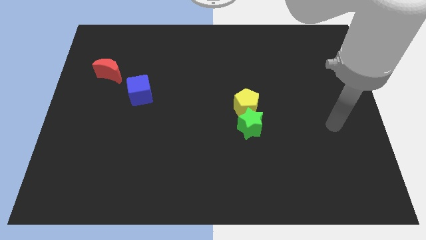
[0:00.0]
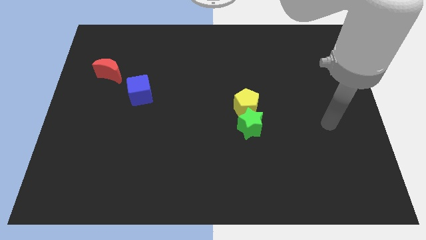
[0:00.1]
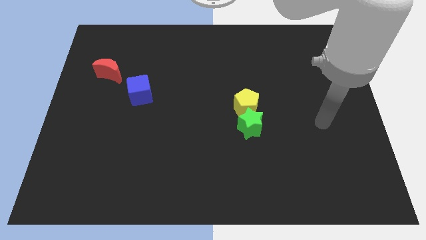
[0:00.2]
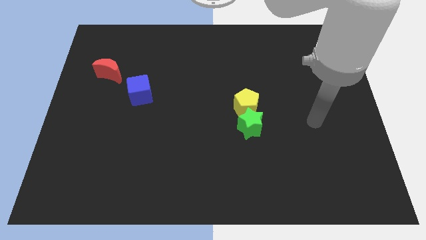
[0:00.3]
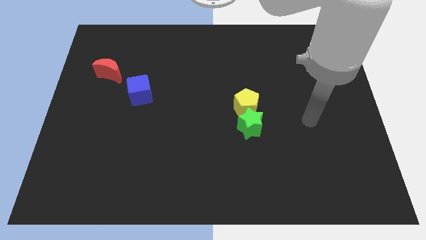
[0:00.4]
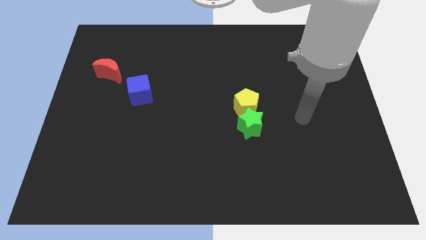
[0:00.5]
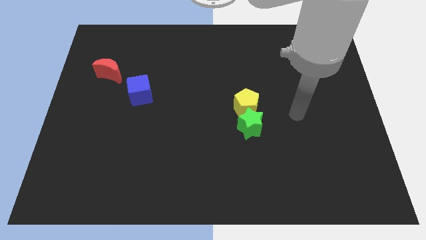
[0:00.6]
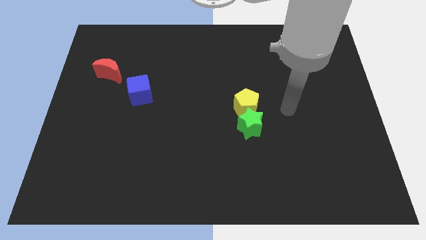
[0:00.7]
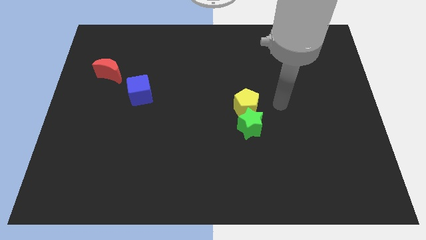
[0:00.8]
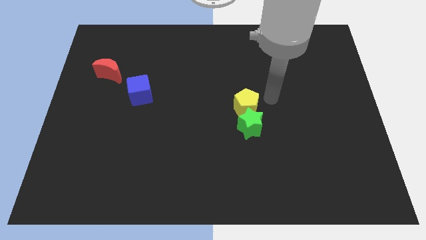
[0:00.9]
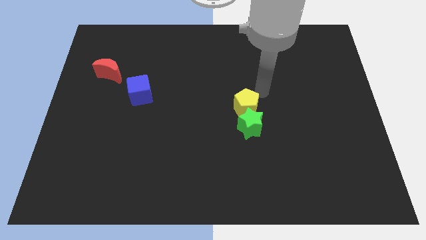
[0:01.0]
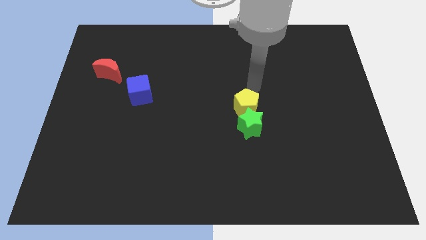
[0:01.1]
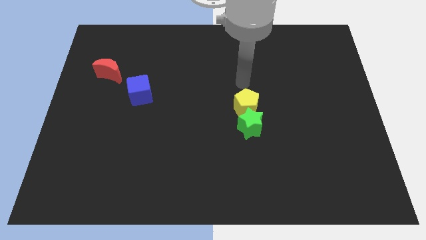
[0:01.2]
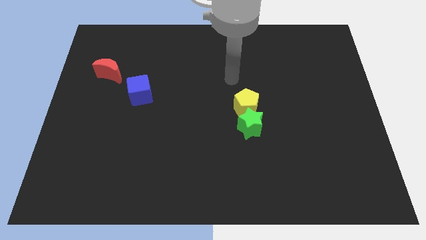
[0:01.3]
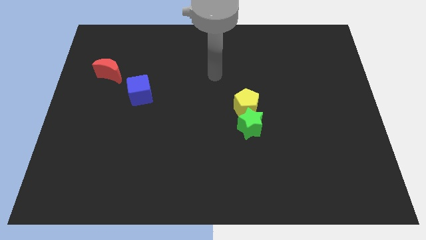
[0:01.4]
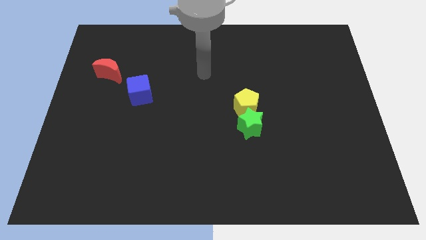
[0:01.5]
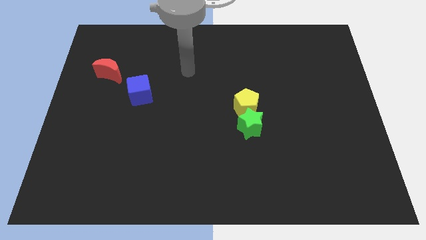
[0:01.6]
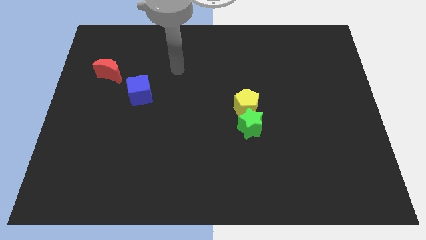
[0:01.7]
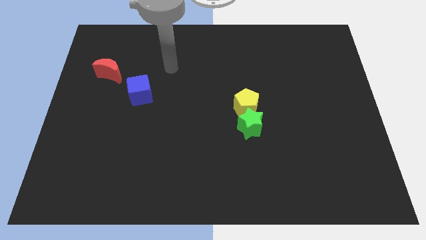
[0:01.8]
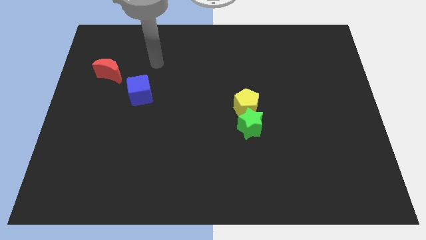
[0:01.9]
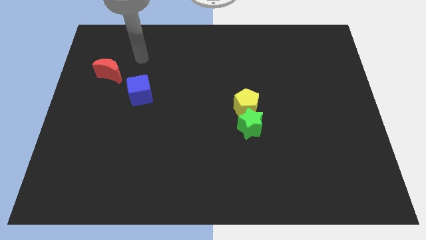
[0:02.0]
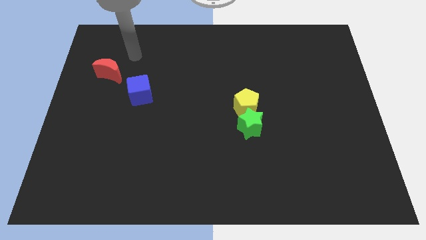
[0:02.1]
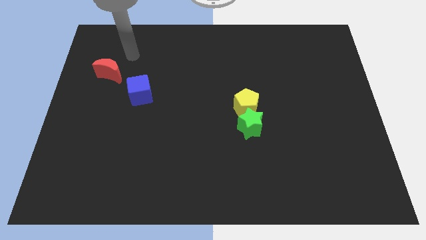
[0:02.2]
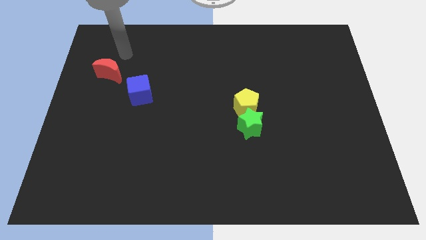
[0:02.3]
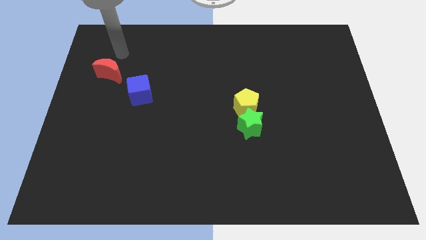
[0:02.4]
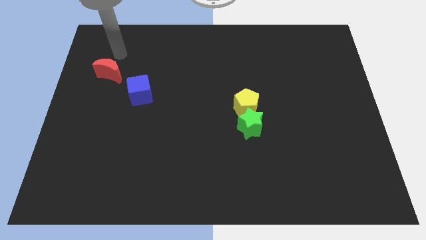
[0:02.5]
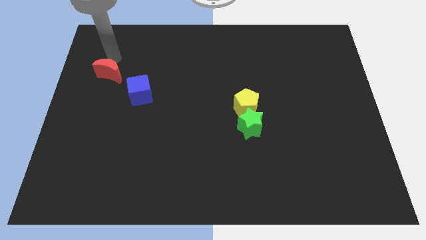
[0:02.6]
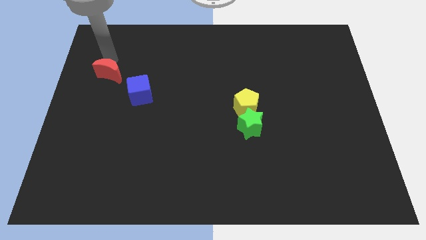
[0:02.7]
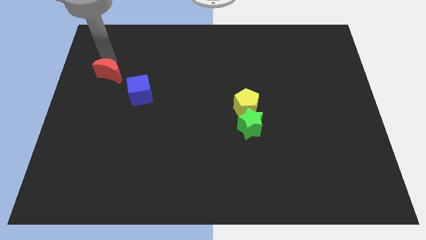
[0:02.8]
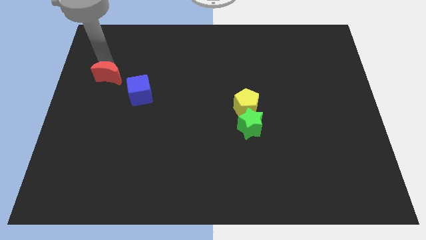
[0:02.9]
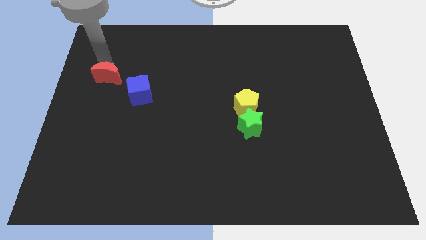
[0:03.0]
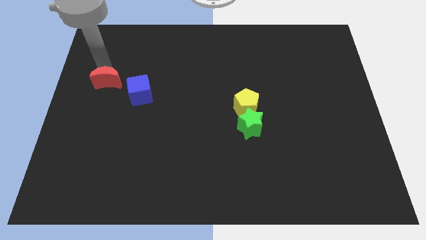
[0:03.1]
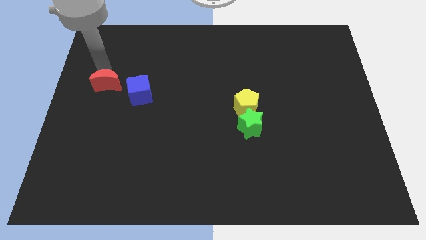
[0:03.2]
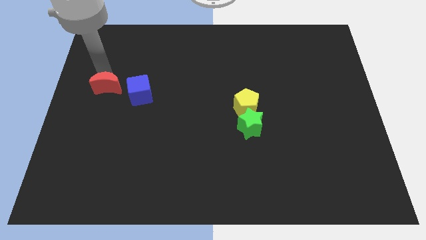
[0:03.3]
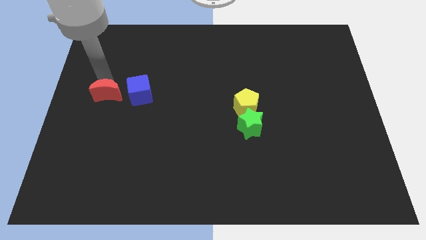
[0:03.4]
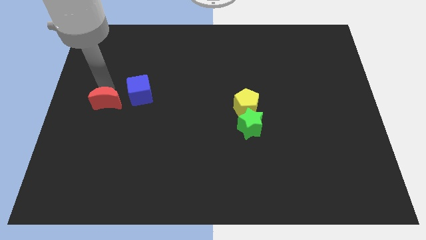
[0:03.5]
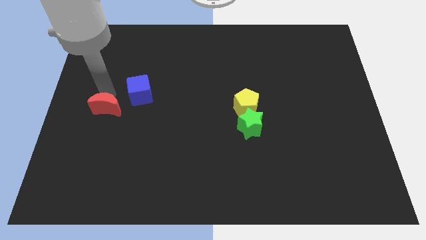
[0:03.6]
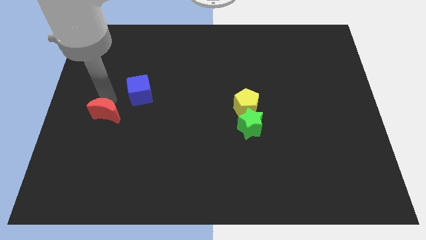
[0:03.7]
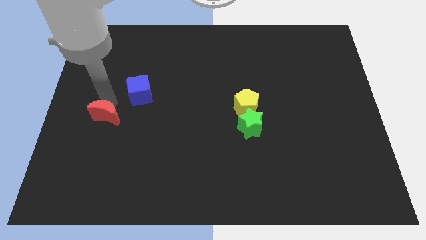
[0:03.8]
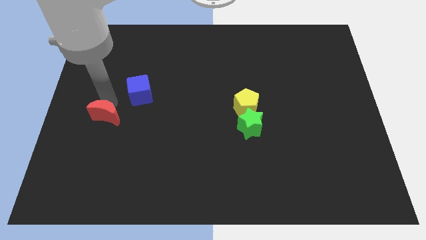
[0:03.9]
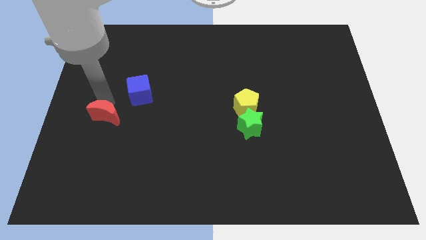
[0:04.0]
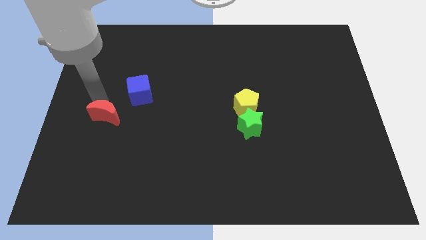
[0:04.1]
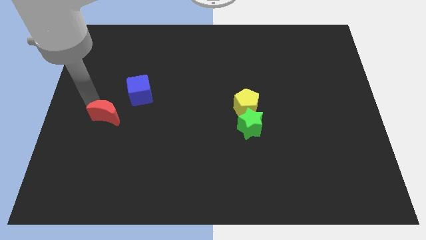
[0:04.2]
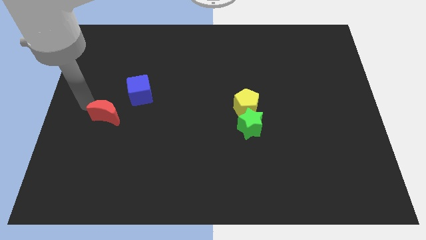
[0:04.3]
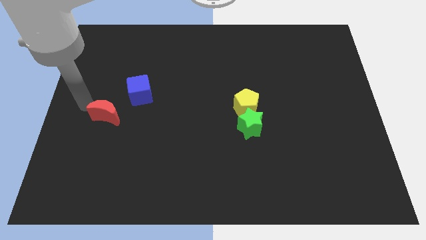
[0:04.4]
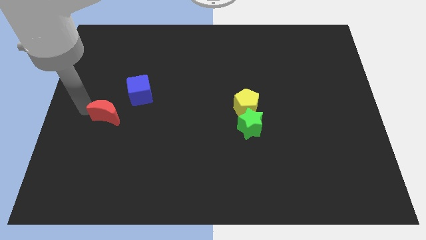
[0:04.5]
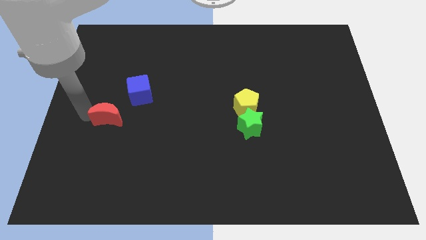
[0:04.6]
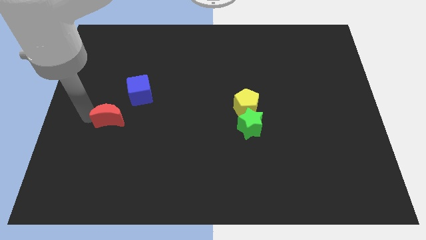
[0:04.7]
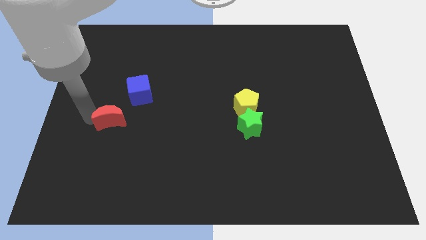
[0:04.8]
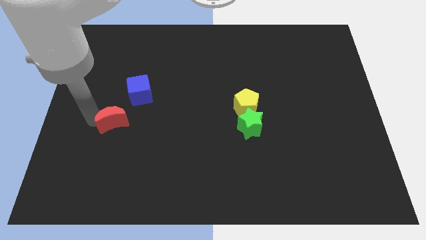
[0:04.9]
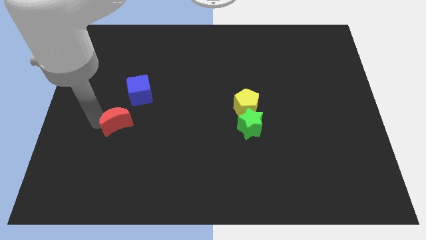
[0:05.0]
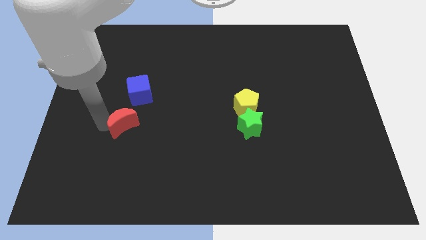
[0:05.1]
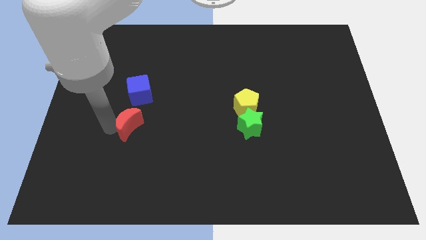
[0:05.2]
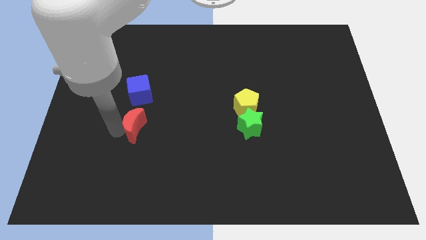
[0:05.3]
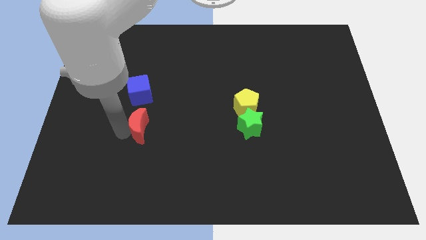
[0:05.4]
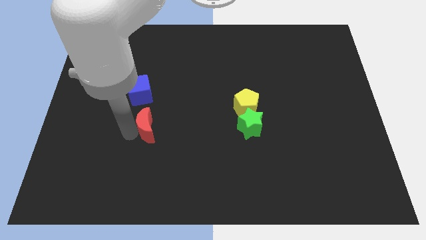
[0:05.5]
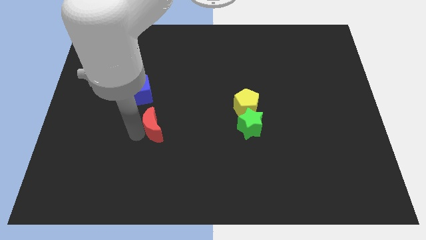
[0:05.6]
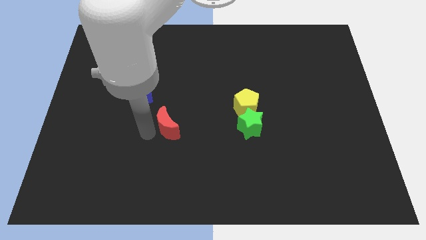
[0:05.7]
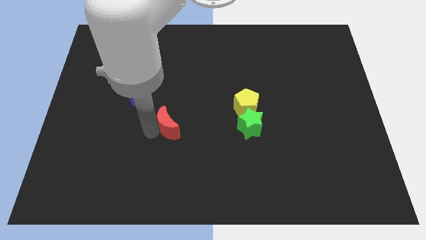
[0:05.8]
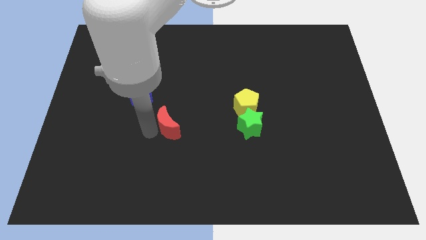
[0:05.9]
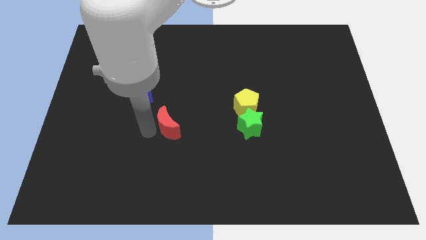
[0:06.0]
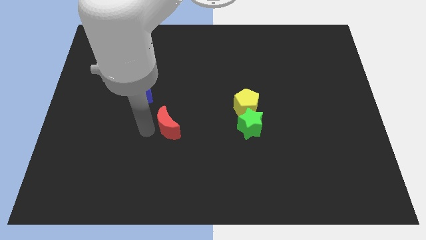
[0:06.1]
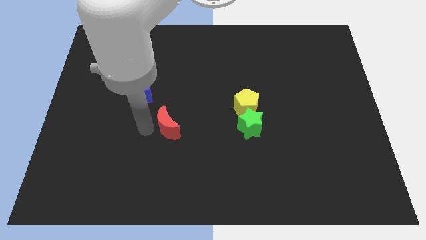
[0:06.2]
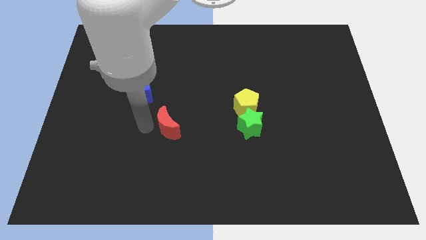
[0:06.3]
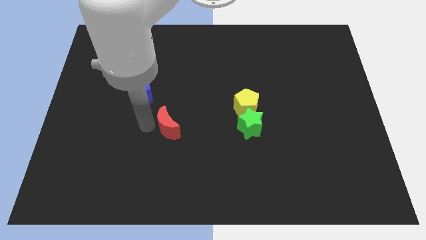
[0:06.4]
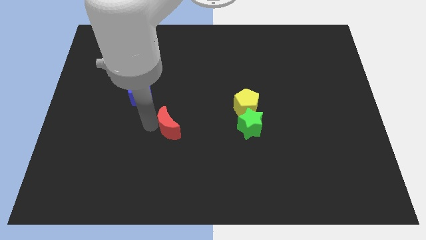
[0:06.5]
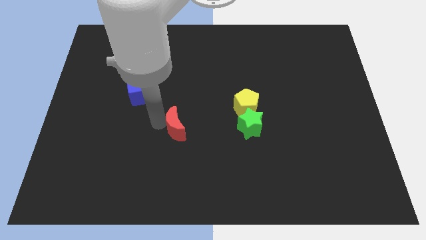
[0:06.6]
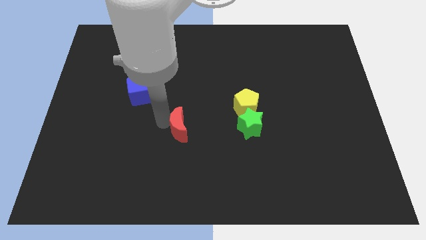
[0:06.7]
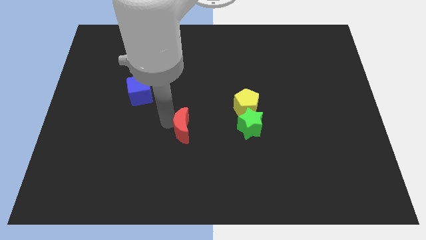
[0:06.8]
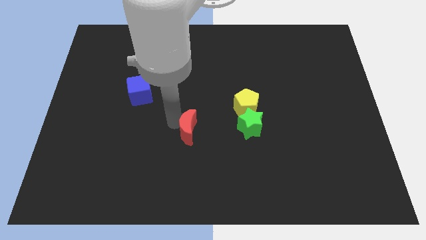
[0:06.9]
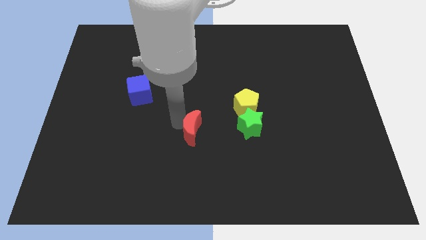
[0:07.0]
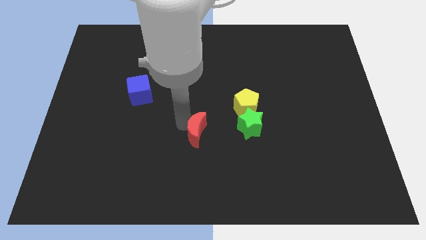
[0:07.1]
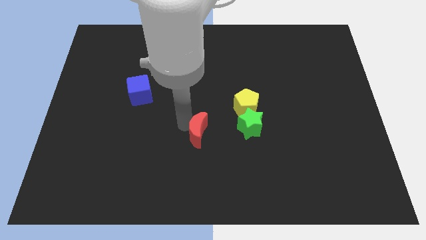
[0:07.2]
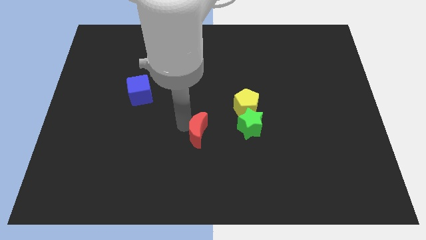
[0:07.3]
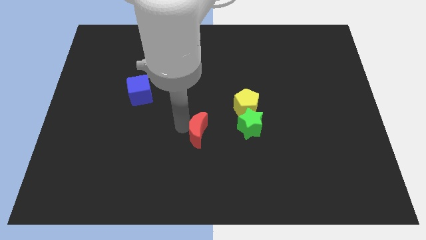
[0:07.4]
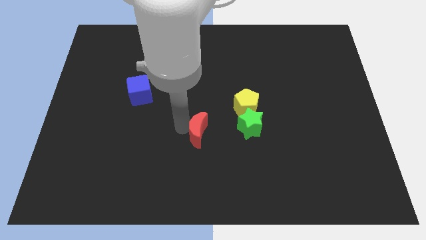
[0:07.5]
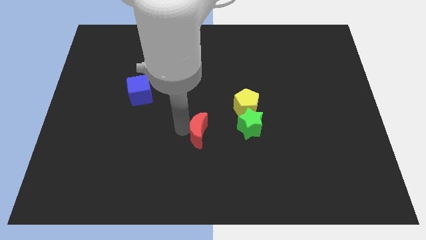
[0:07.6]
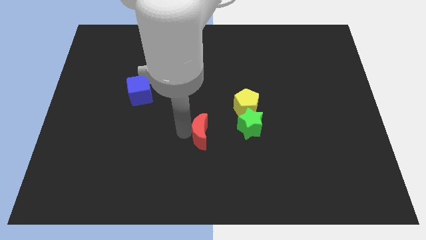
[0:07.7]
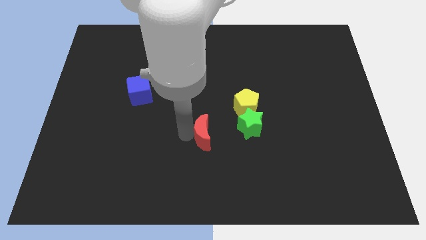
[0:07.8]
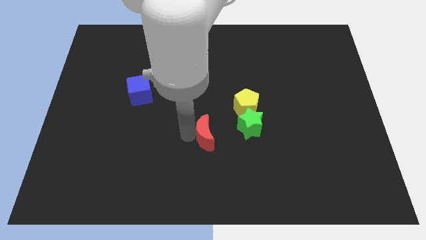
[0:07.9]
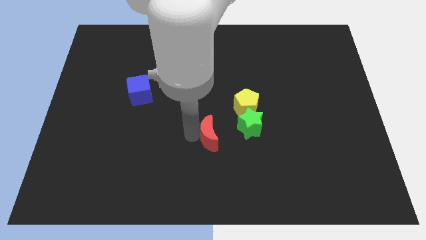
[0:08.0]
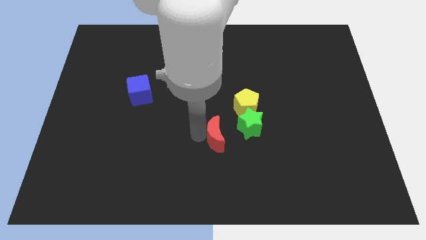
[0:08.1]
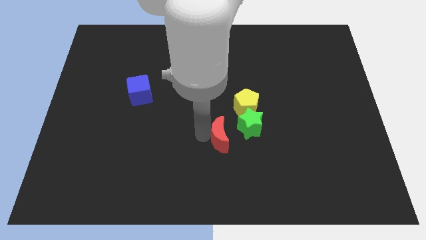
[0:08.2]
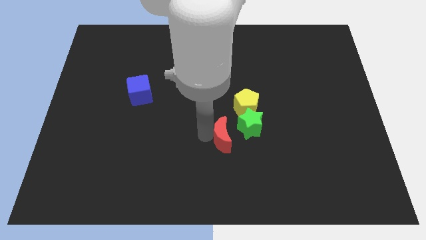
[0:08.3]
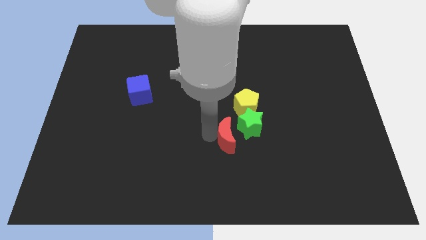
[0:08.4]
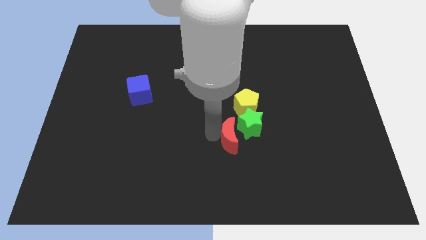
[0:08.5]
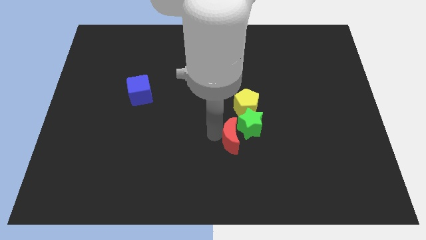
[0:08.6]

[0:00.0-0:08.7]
slide the red moon to the green star
